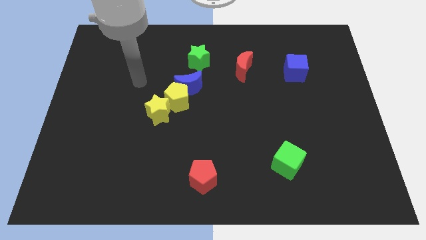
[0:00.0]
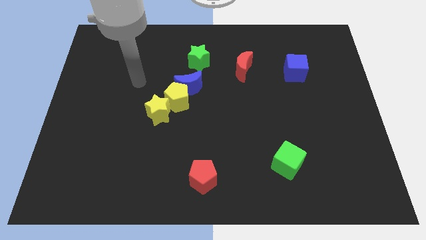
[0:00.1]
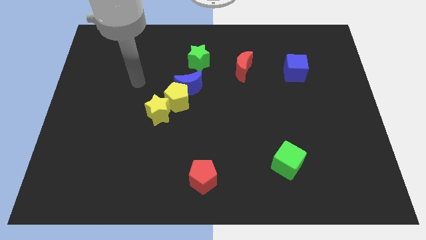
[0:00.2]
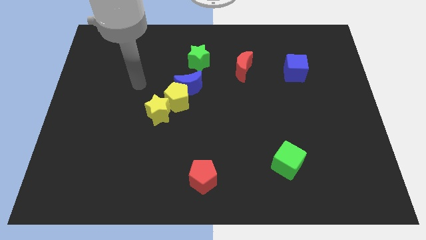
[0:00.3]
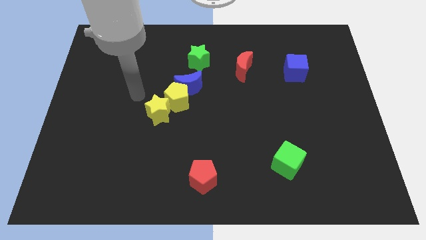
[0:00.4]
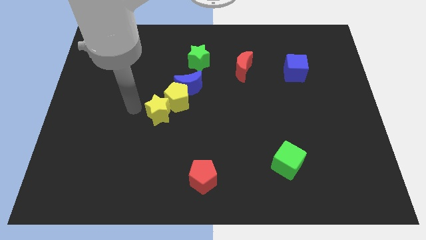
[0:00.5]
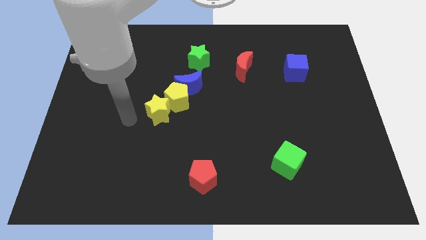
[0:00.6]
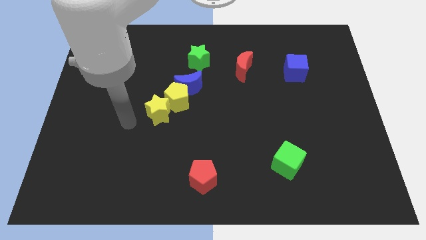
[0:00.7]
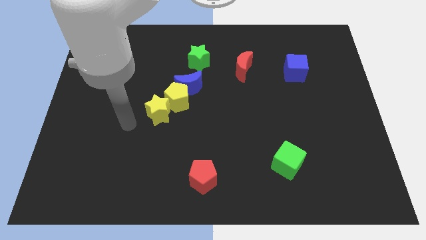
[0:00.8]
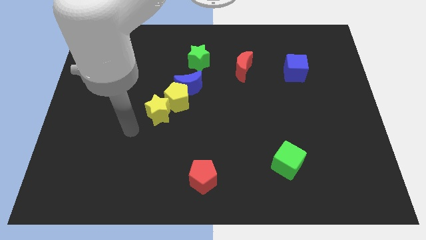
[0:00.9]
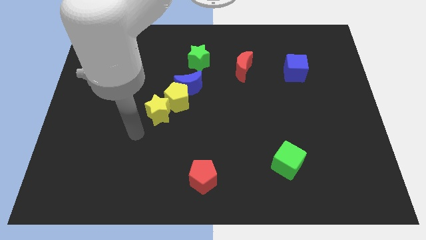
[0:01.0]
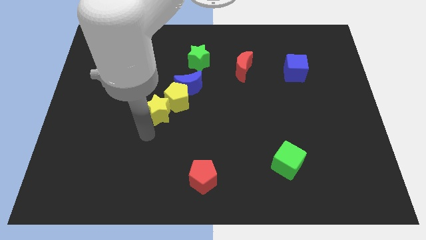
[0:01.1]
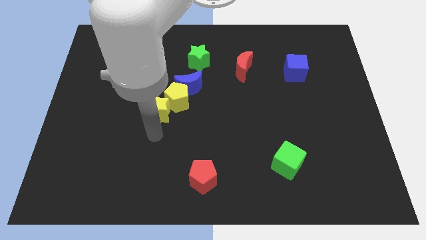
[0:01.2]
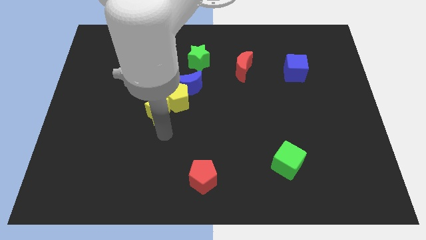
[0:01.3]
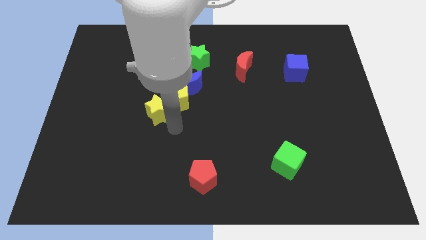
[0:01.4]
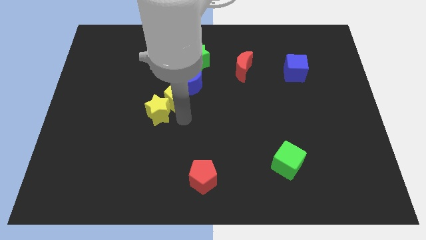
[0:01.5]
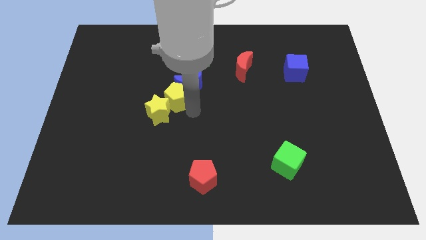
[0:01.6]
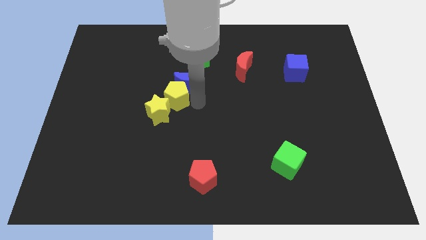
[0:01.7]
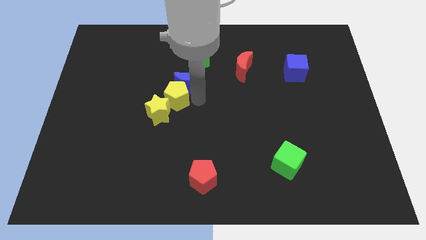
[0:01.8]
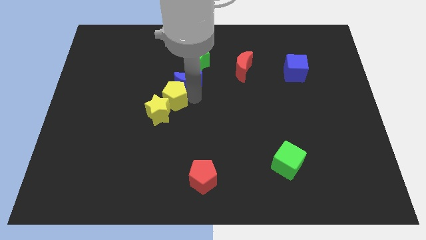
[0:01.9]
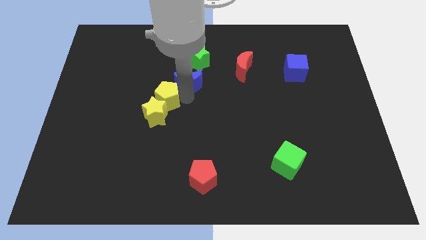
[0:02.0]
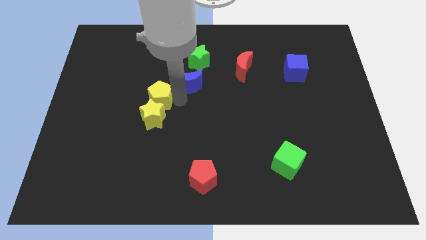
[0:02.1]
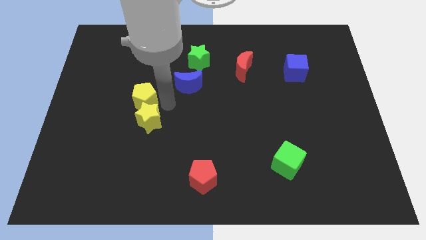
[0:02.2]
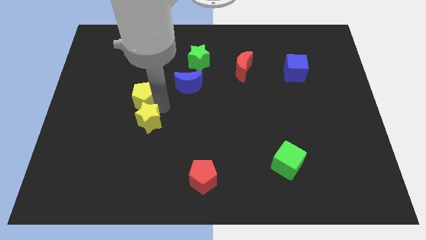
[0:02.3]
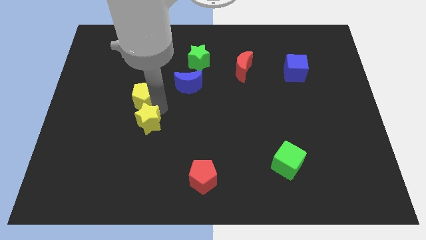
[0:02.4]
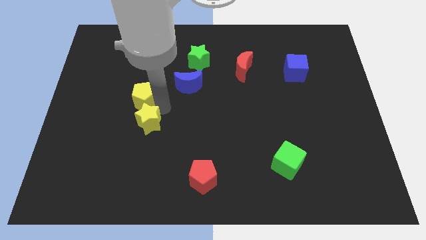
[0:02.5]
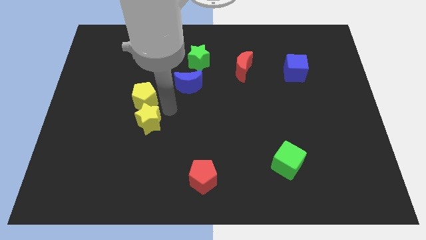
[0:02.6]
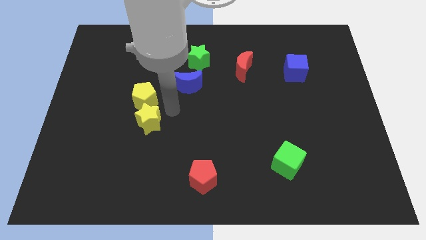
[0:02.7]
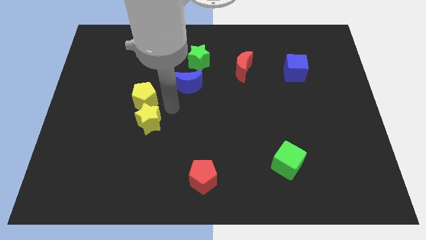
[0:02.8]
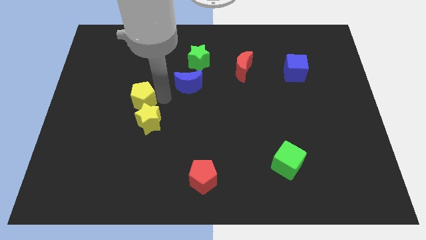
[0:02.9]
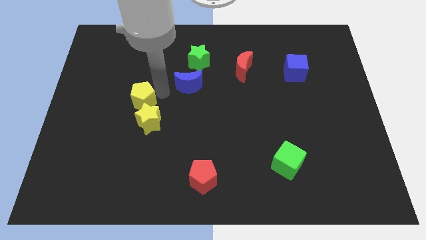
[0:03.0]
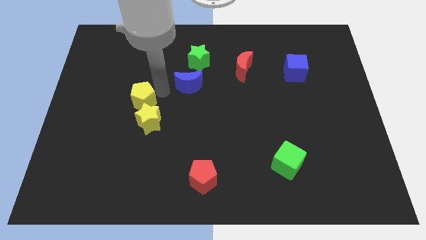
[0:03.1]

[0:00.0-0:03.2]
push the yellow pentagon to the top side of the yellow star

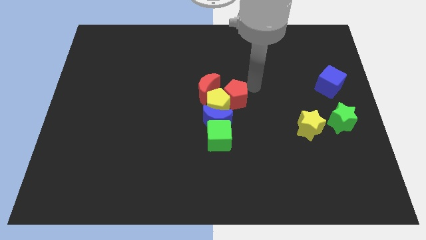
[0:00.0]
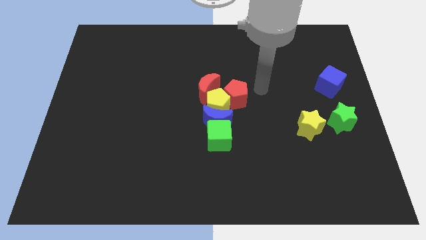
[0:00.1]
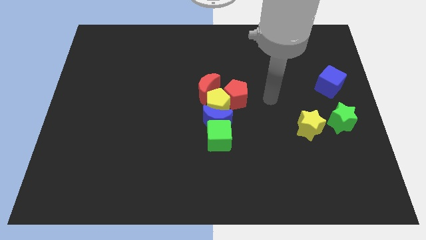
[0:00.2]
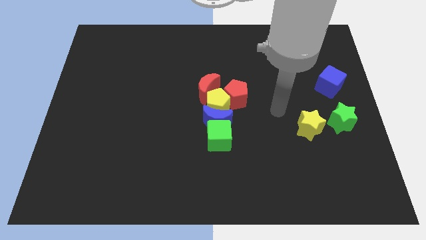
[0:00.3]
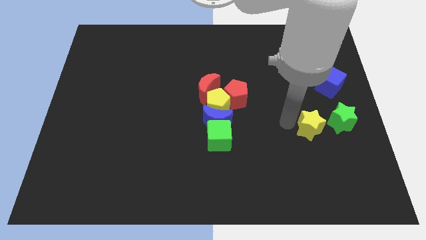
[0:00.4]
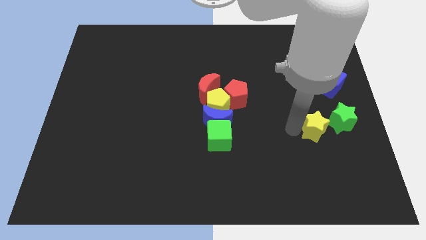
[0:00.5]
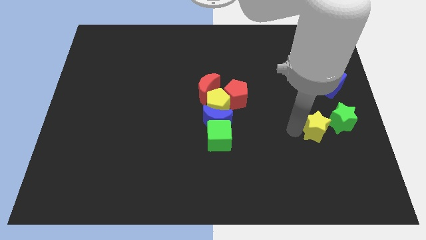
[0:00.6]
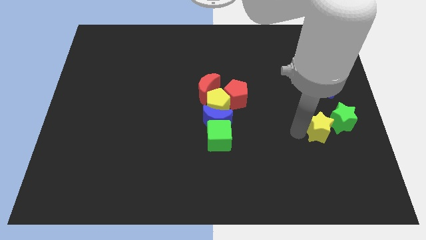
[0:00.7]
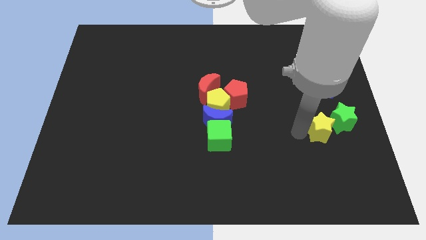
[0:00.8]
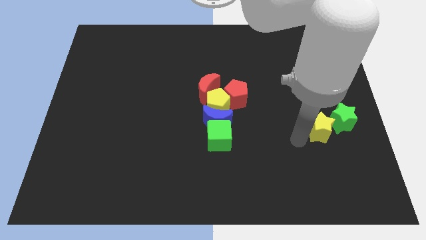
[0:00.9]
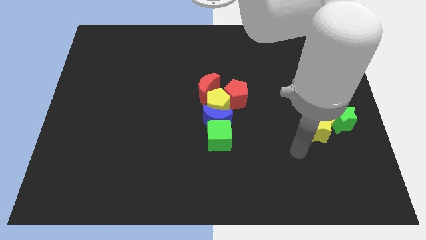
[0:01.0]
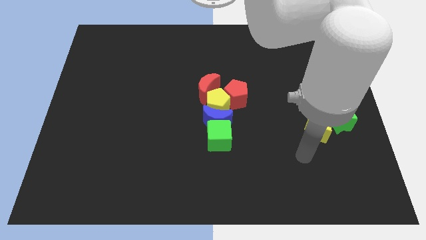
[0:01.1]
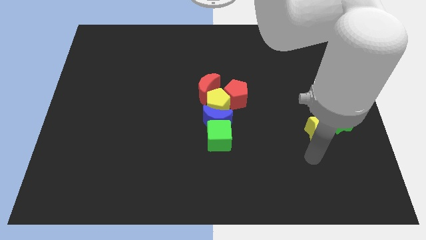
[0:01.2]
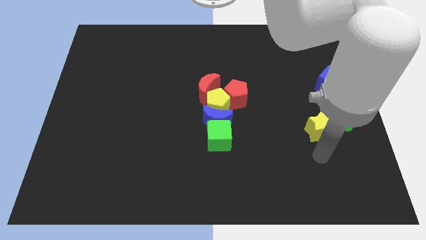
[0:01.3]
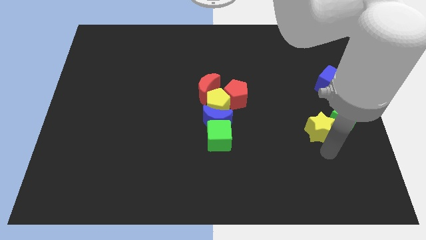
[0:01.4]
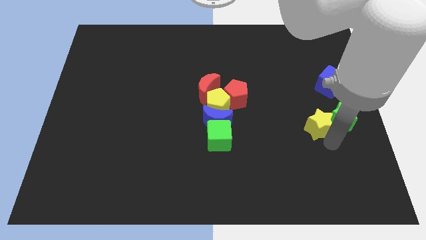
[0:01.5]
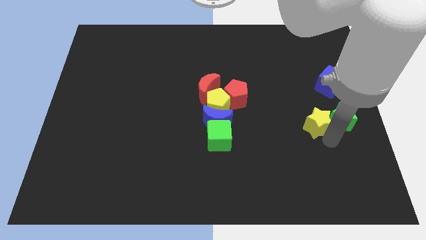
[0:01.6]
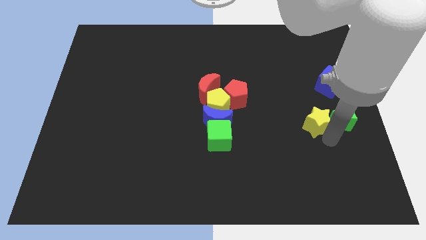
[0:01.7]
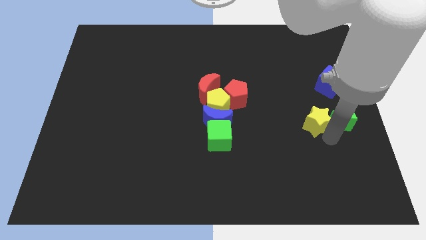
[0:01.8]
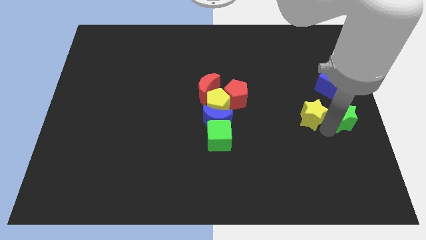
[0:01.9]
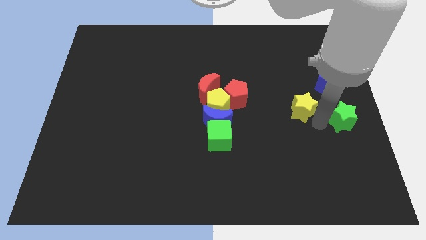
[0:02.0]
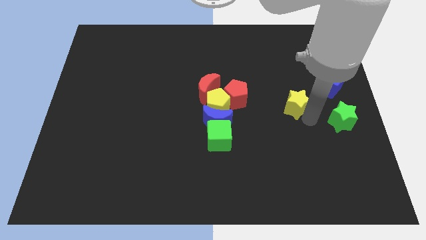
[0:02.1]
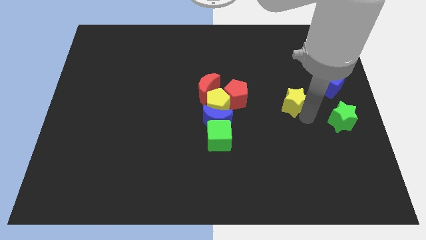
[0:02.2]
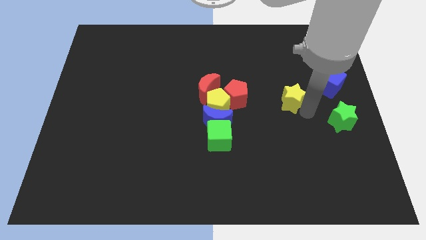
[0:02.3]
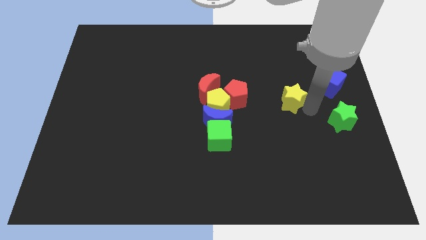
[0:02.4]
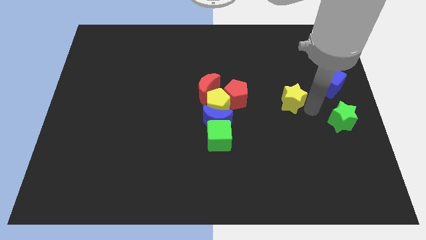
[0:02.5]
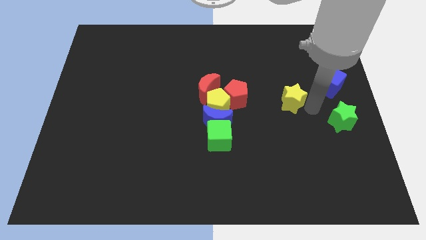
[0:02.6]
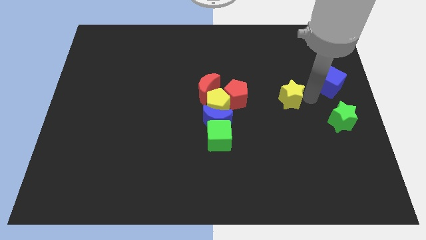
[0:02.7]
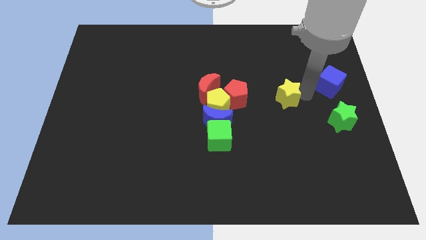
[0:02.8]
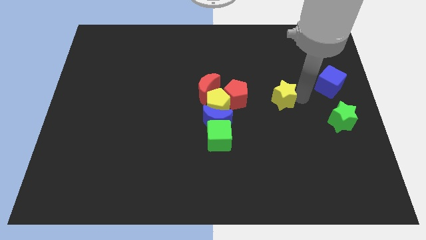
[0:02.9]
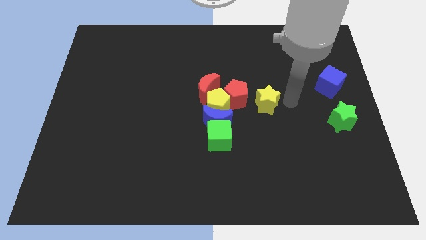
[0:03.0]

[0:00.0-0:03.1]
put yellow star to the right side of the red pentagon

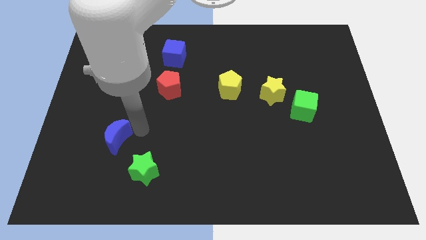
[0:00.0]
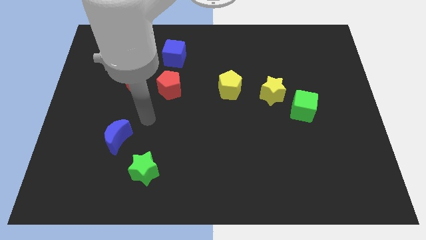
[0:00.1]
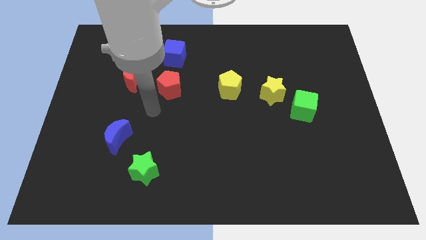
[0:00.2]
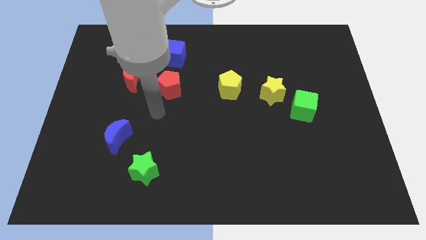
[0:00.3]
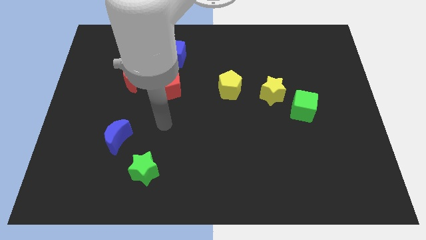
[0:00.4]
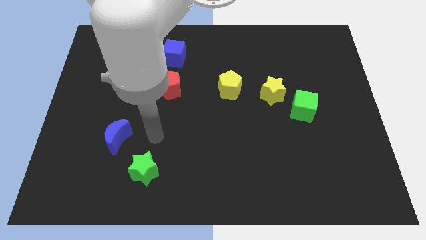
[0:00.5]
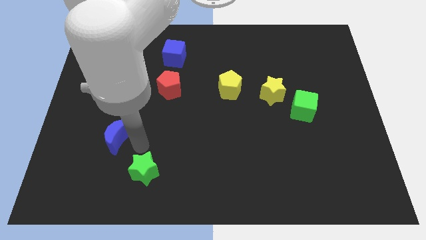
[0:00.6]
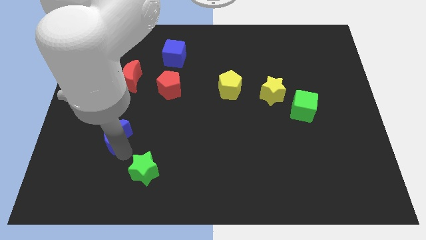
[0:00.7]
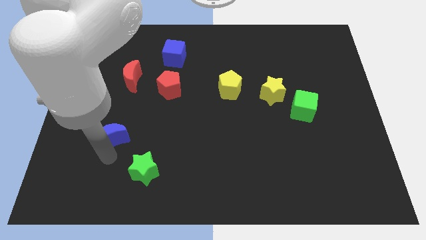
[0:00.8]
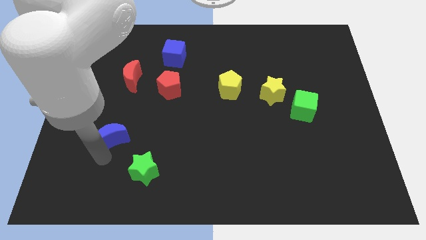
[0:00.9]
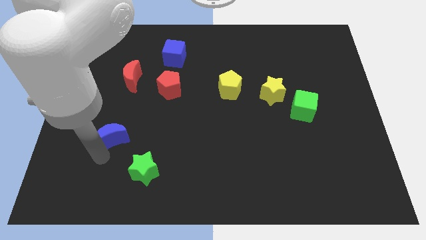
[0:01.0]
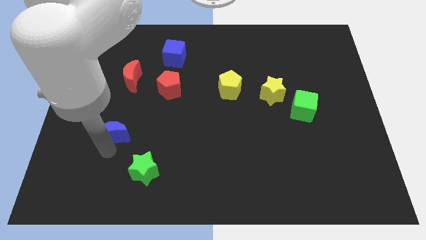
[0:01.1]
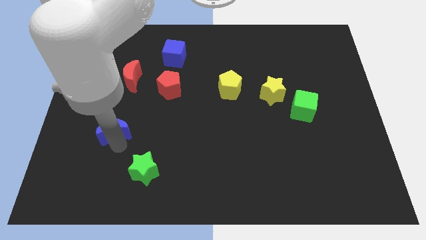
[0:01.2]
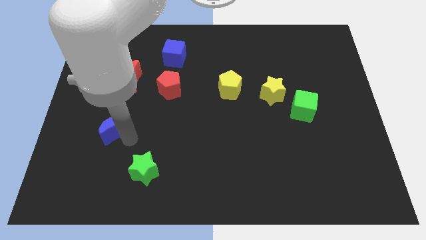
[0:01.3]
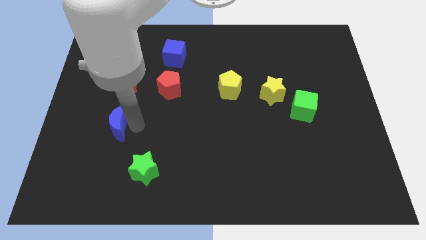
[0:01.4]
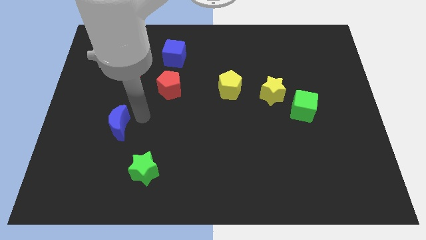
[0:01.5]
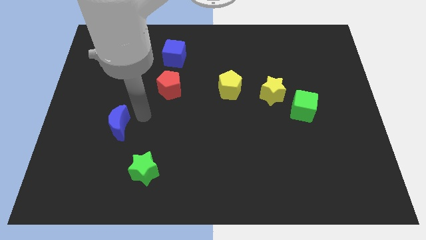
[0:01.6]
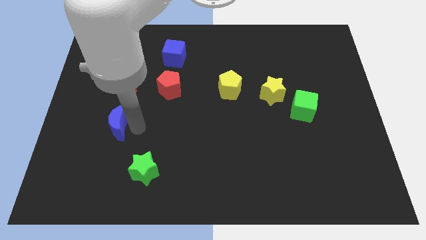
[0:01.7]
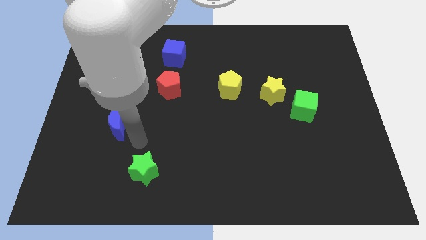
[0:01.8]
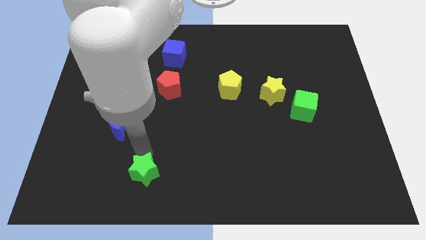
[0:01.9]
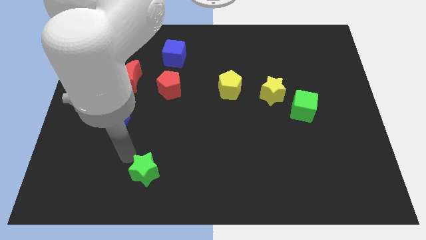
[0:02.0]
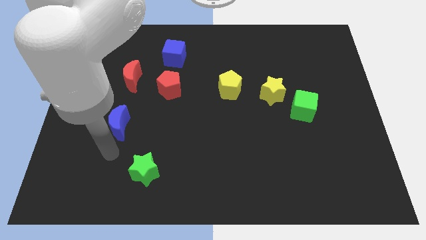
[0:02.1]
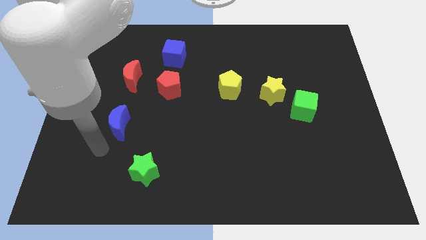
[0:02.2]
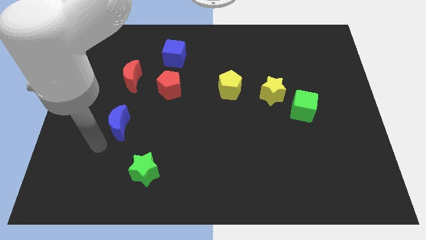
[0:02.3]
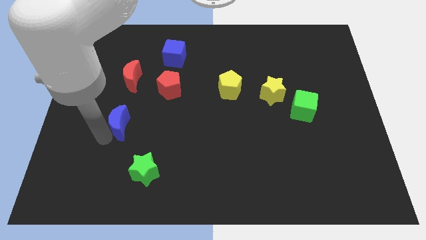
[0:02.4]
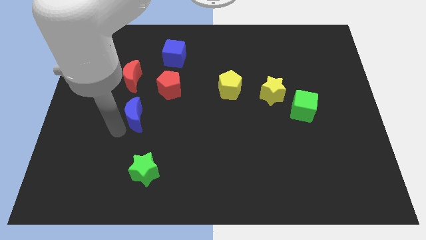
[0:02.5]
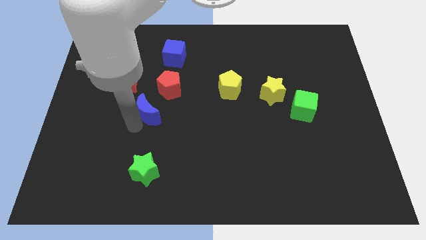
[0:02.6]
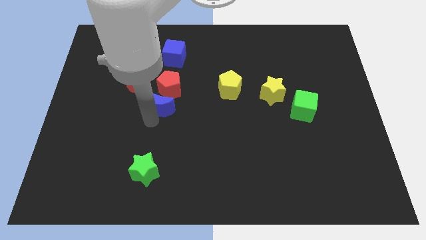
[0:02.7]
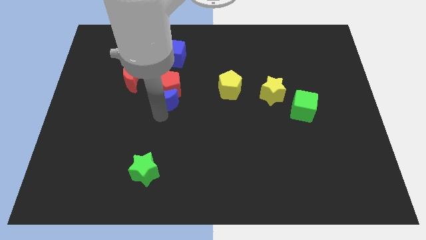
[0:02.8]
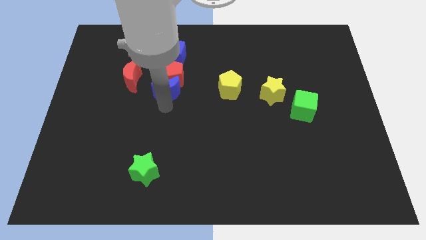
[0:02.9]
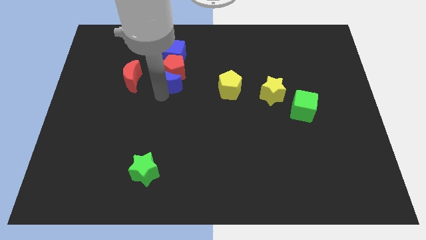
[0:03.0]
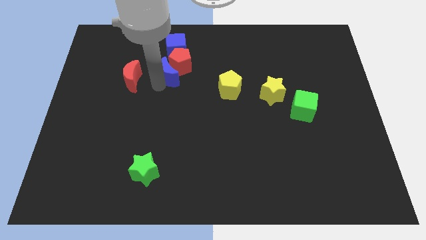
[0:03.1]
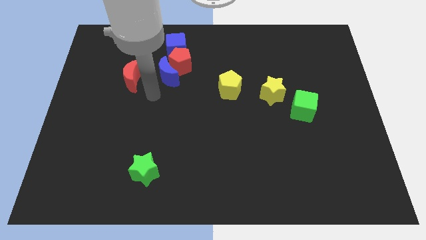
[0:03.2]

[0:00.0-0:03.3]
place the blue crescent below the red pentagon
